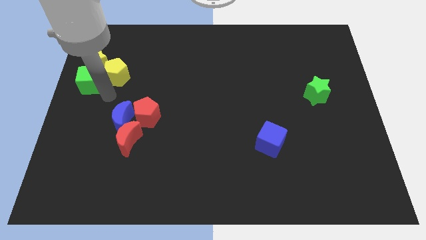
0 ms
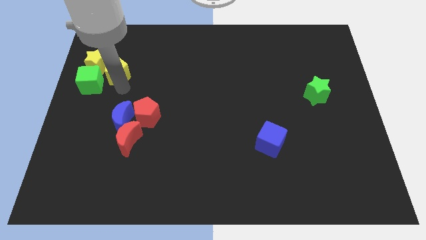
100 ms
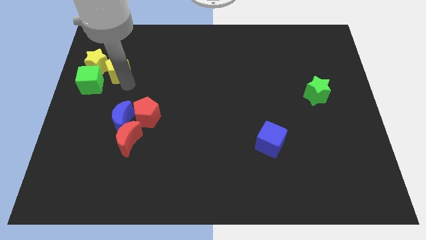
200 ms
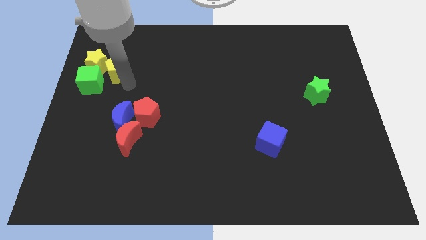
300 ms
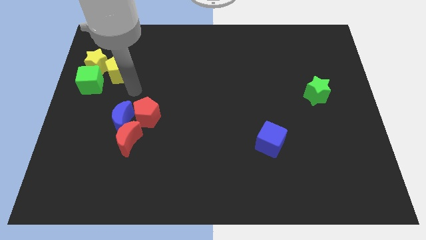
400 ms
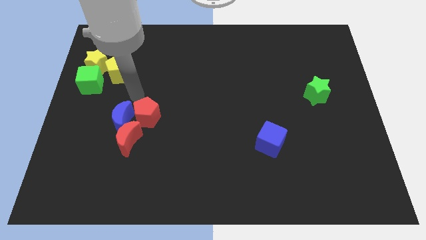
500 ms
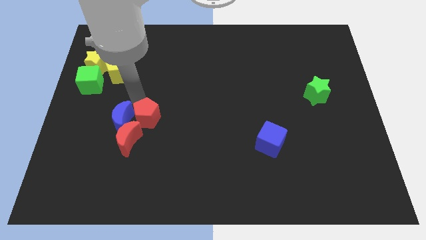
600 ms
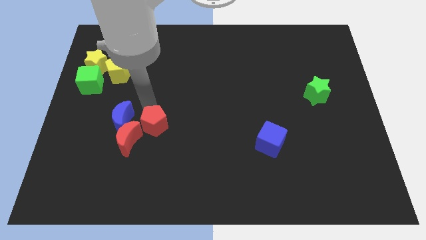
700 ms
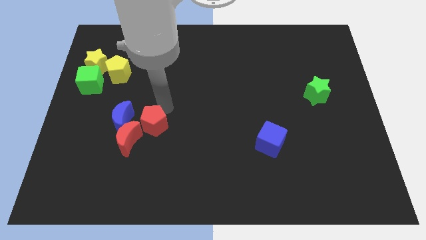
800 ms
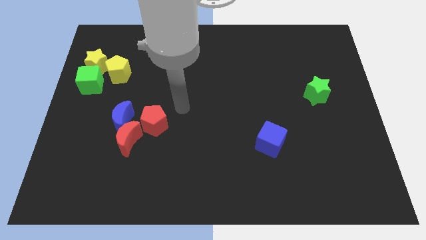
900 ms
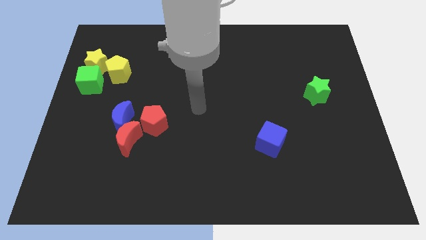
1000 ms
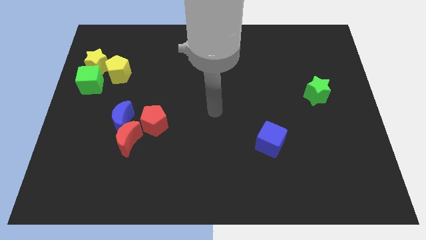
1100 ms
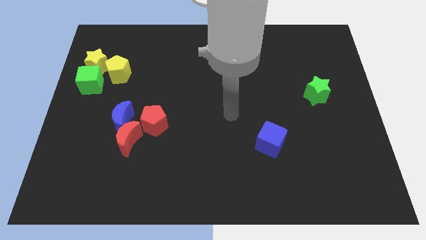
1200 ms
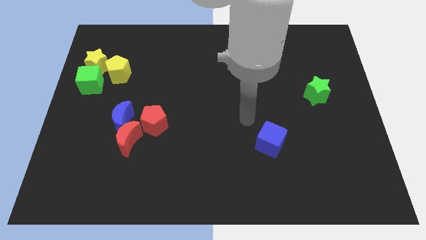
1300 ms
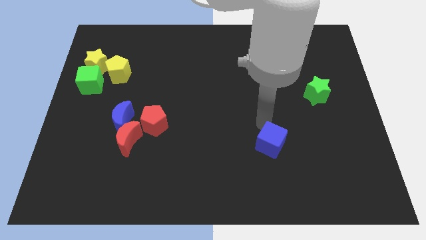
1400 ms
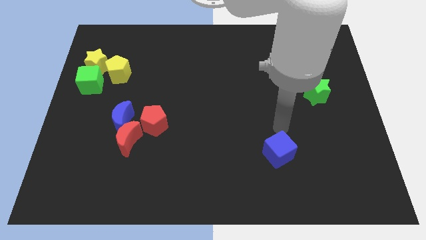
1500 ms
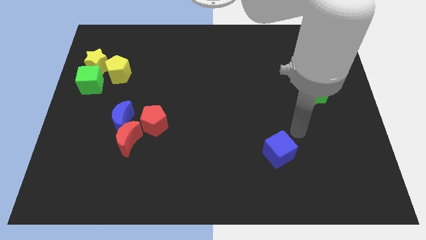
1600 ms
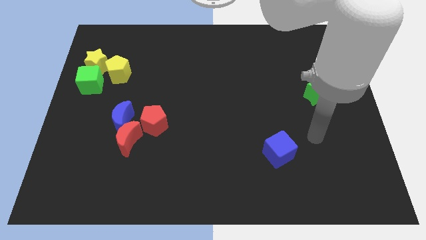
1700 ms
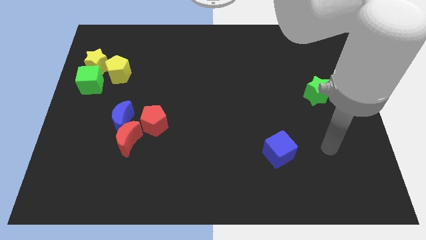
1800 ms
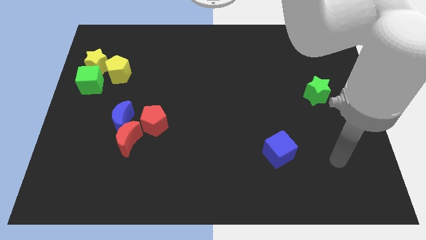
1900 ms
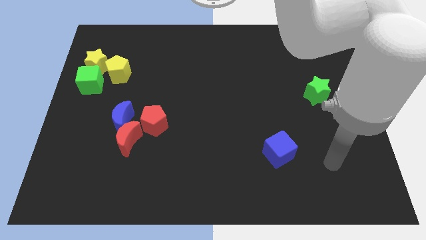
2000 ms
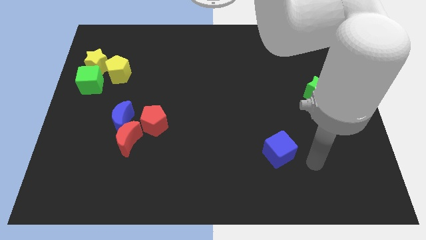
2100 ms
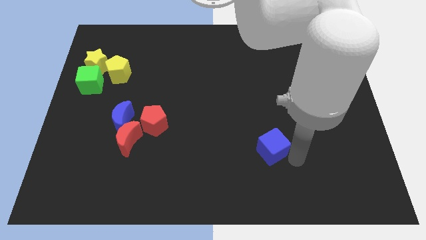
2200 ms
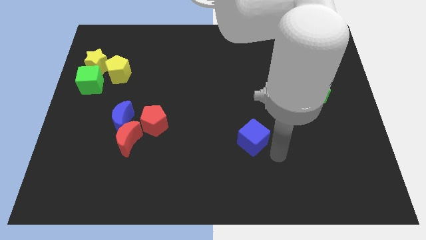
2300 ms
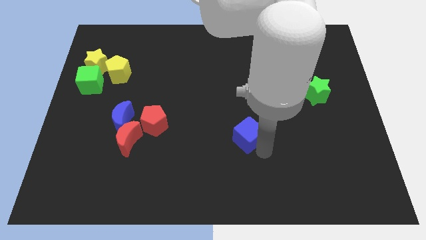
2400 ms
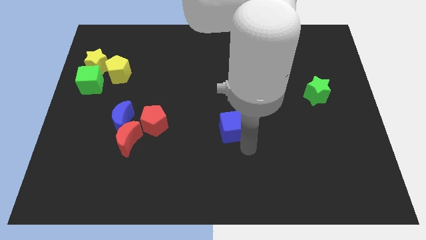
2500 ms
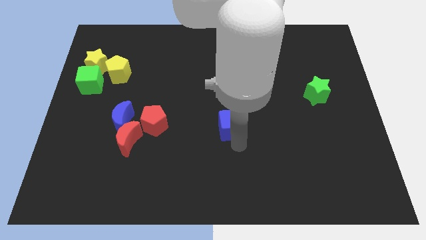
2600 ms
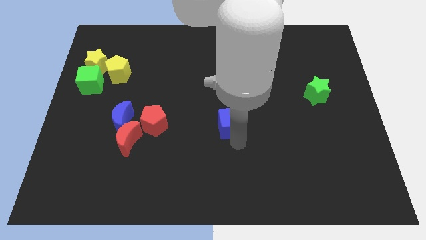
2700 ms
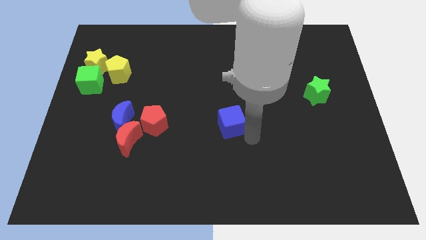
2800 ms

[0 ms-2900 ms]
push the blue cube parallel right to the red pentagon

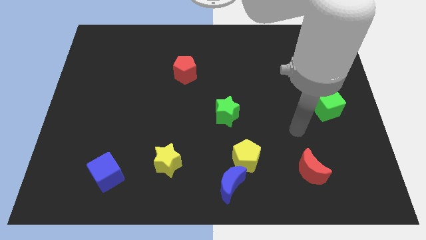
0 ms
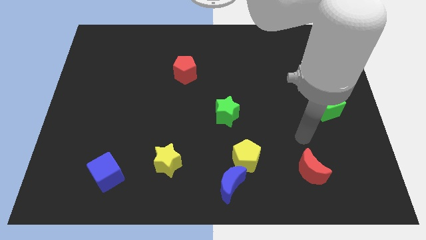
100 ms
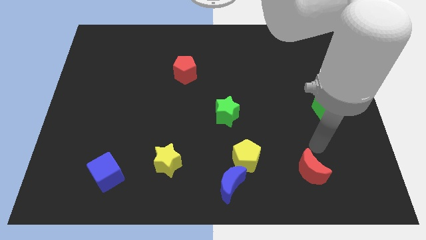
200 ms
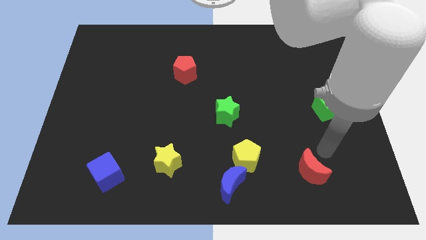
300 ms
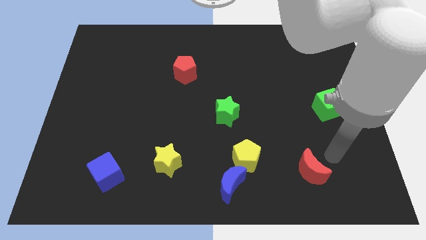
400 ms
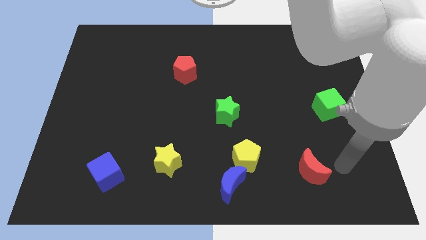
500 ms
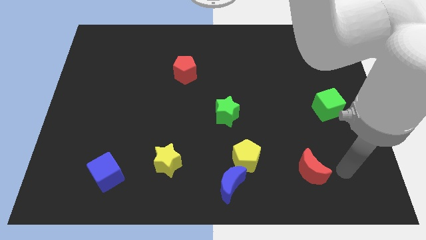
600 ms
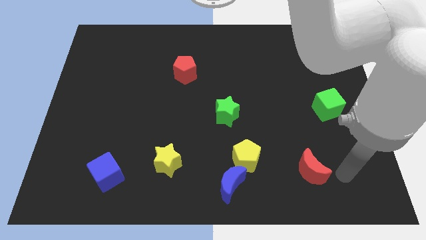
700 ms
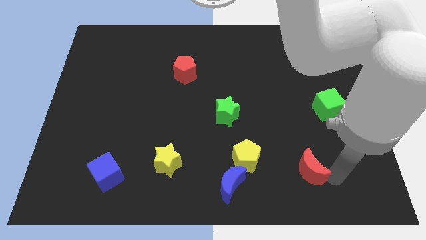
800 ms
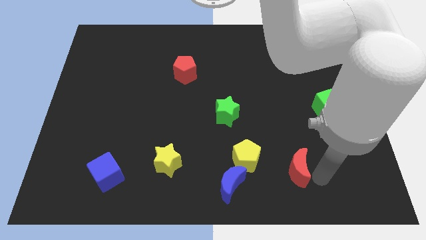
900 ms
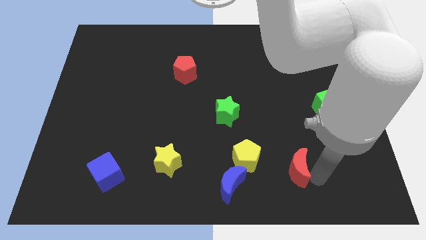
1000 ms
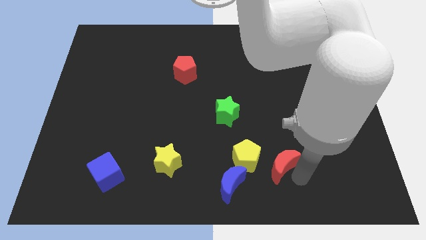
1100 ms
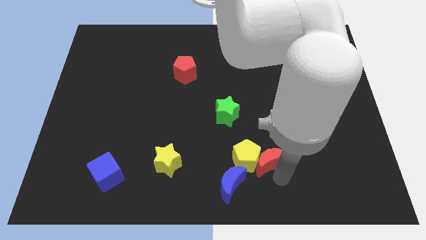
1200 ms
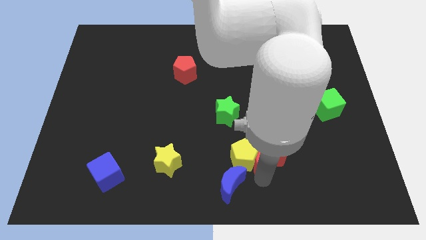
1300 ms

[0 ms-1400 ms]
move the red crescent into the right of the yellow pentagon

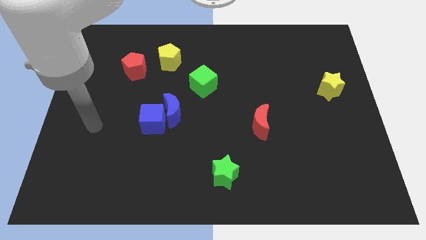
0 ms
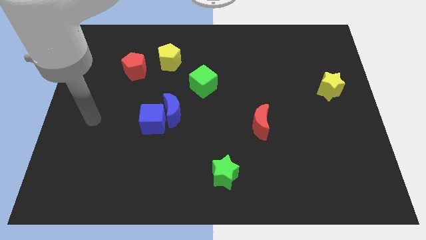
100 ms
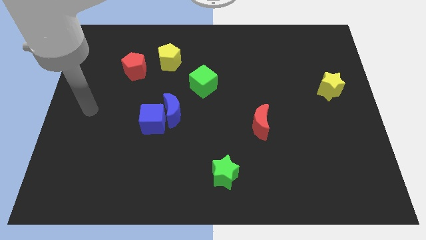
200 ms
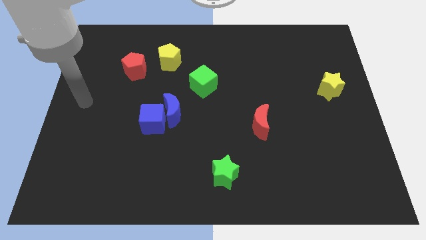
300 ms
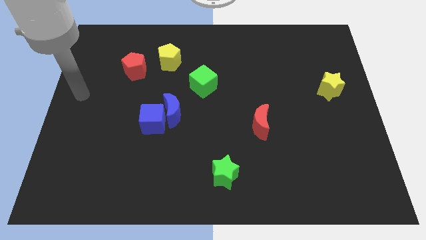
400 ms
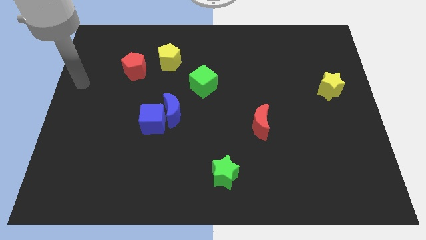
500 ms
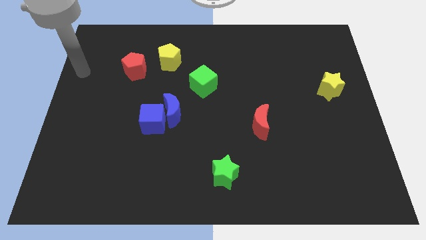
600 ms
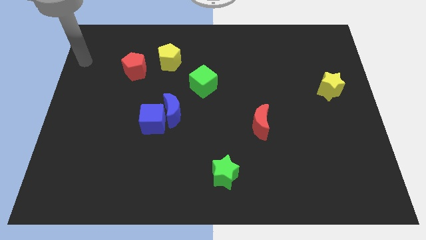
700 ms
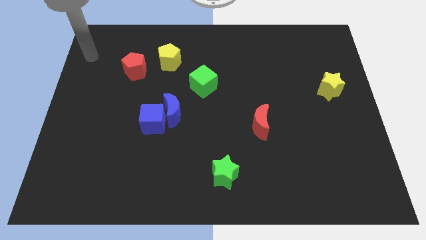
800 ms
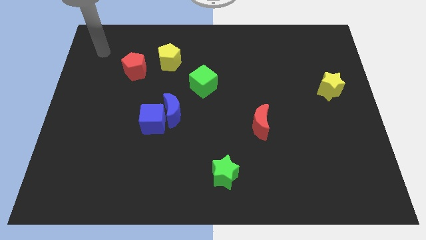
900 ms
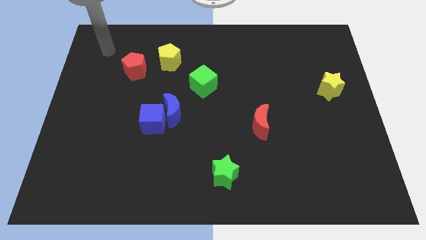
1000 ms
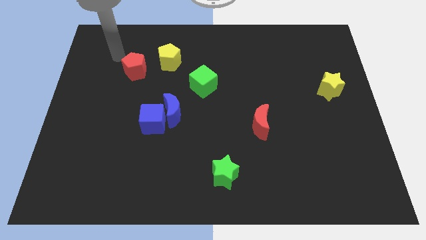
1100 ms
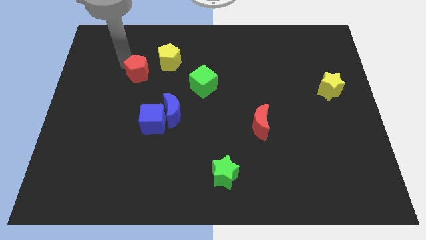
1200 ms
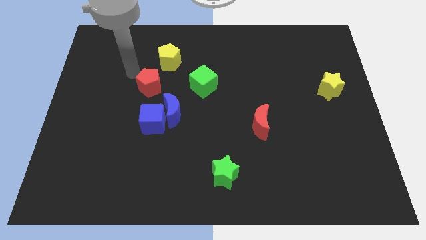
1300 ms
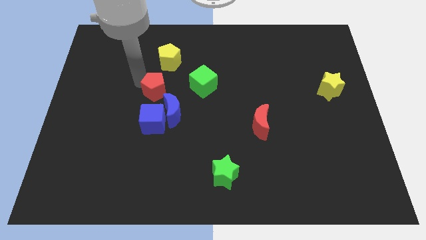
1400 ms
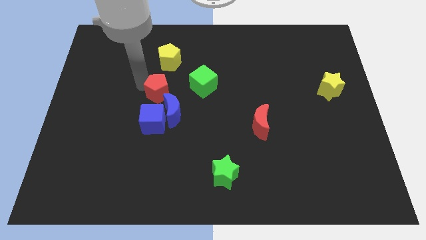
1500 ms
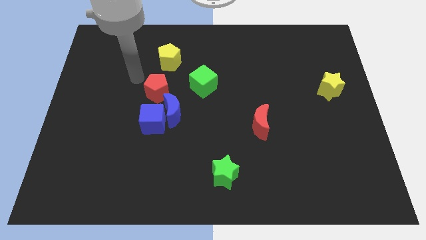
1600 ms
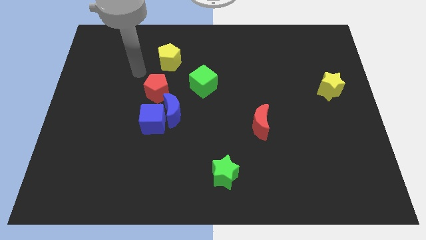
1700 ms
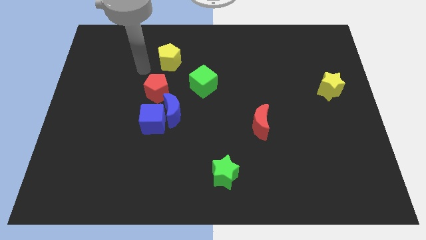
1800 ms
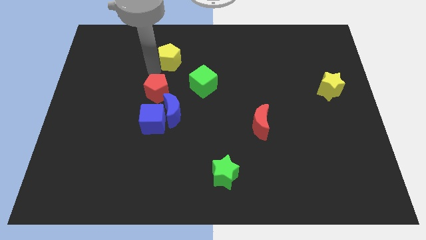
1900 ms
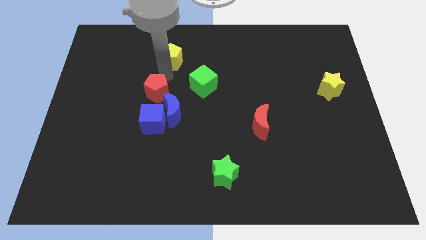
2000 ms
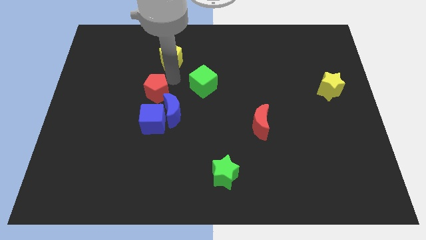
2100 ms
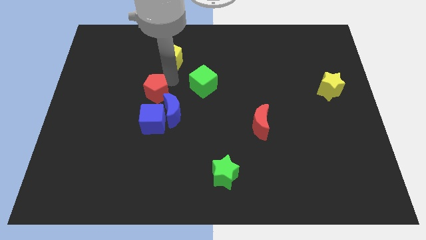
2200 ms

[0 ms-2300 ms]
push the red pentagon to the top left diagonally to the blue crescent

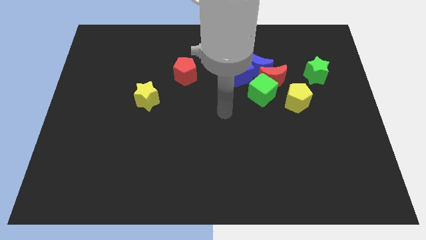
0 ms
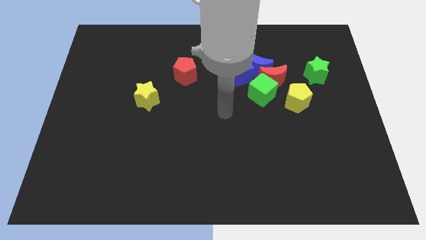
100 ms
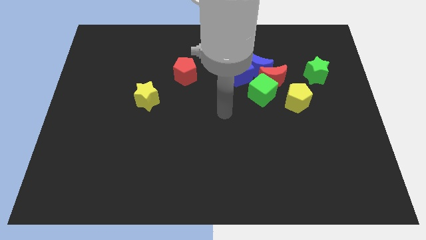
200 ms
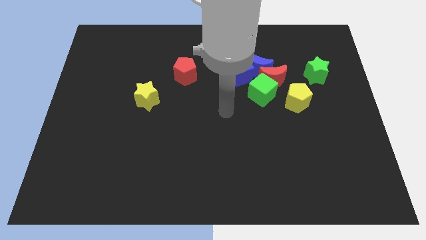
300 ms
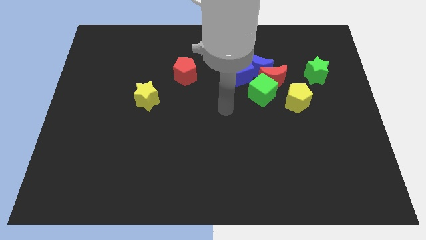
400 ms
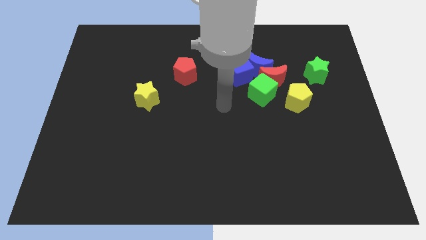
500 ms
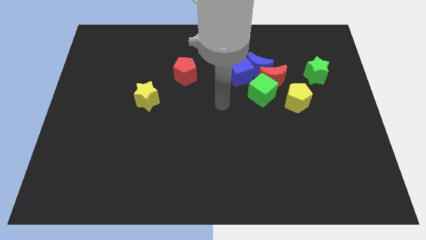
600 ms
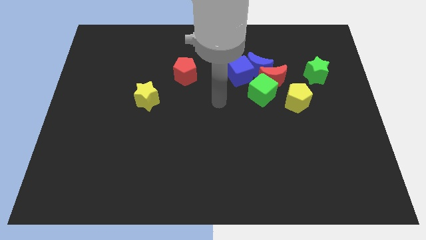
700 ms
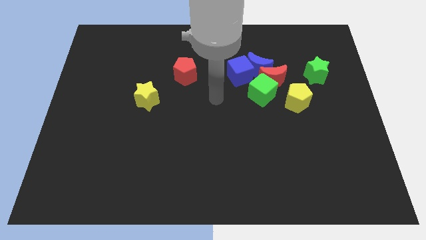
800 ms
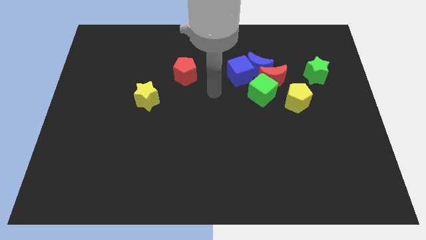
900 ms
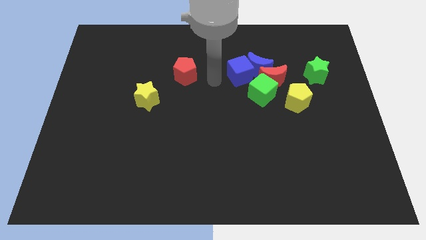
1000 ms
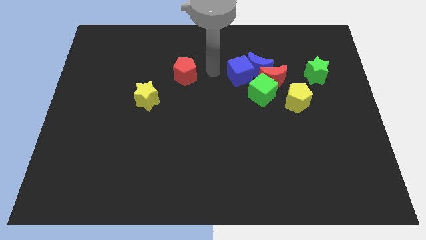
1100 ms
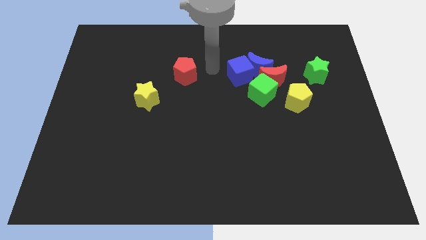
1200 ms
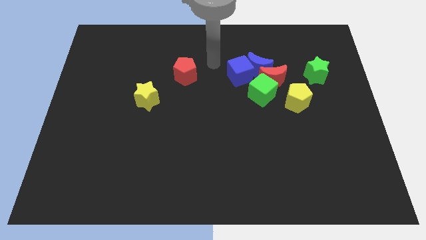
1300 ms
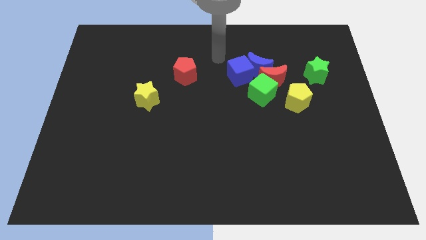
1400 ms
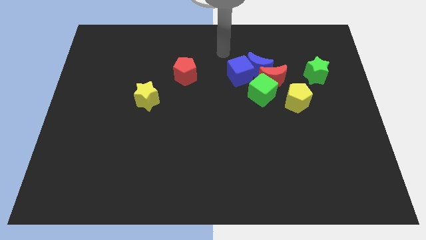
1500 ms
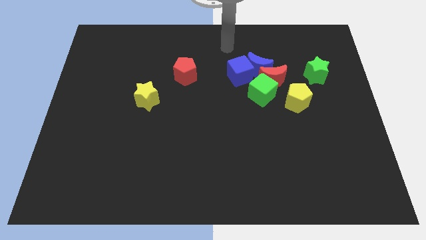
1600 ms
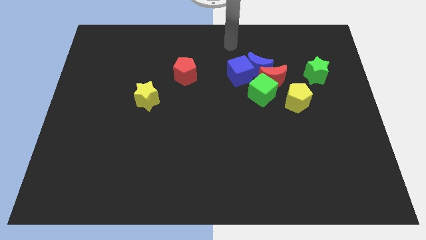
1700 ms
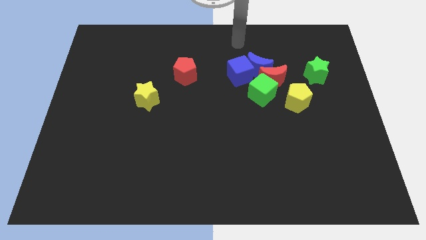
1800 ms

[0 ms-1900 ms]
move the pointer above the blue cube

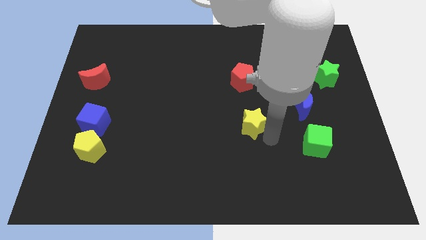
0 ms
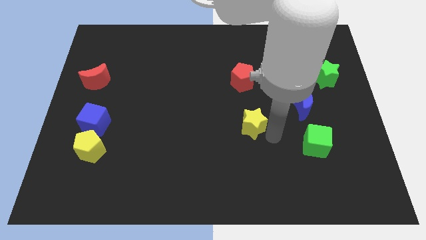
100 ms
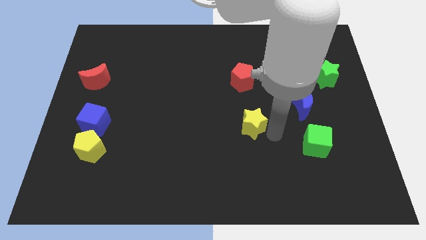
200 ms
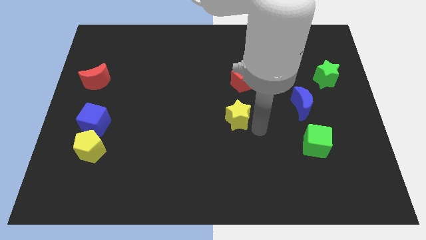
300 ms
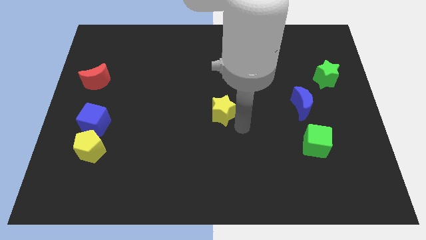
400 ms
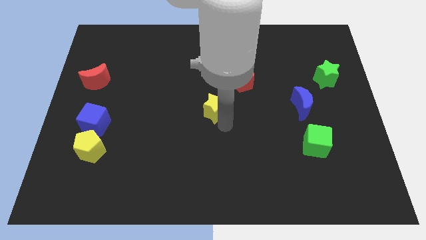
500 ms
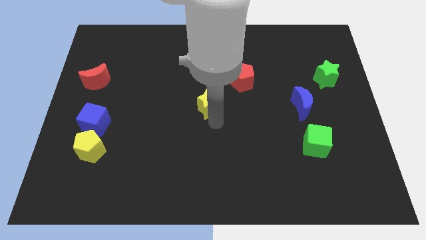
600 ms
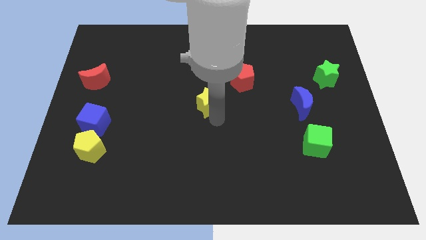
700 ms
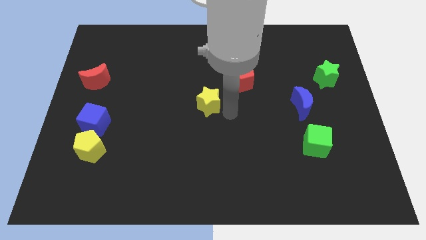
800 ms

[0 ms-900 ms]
move the yellow star at the center of the board
